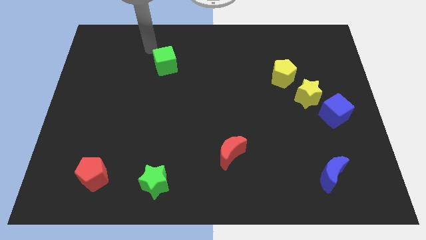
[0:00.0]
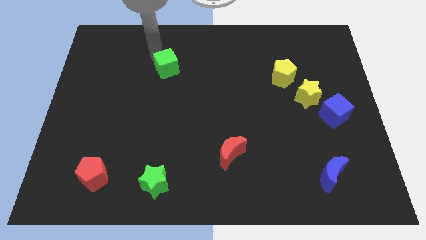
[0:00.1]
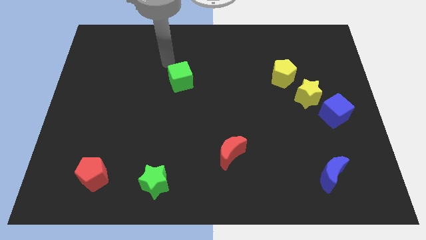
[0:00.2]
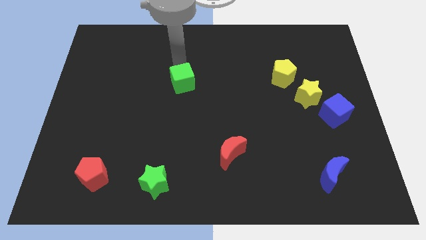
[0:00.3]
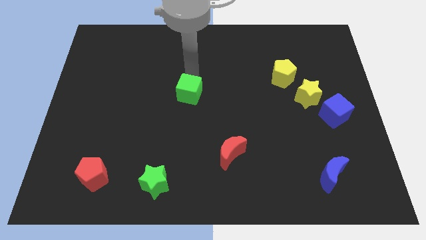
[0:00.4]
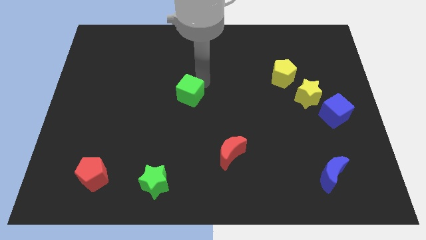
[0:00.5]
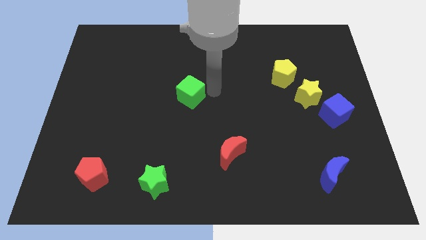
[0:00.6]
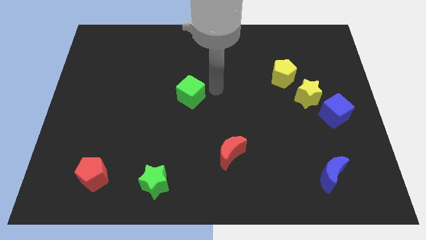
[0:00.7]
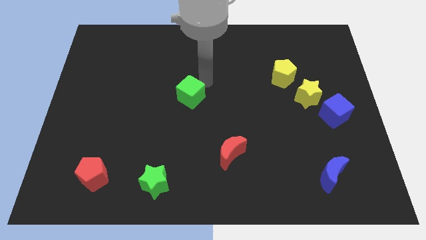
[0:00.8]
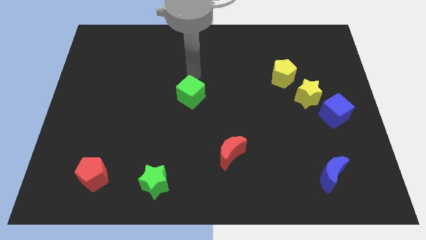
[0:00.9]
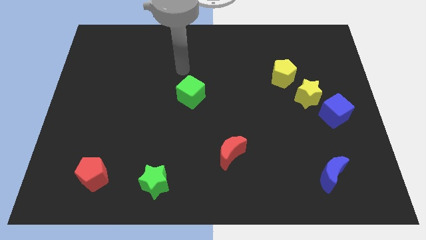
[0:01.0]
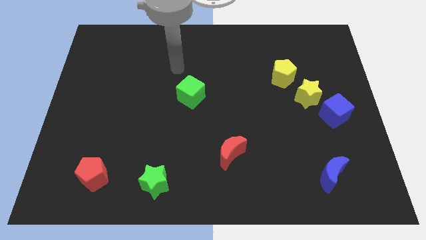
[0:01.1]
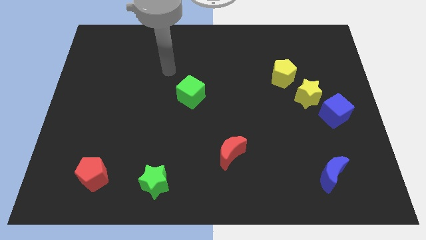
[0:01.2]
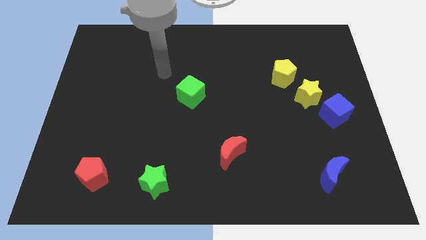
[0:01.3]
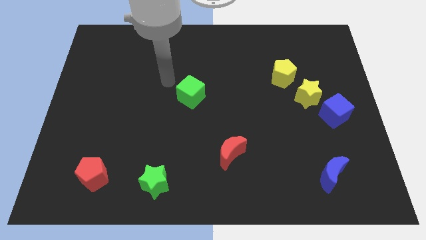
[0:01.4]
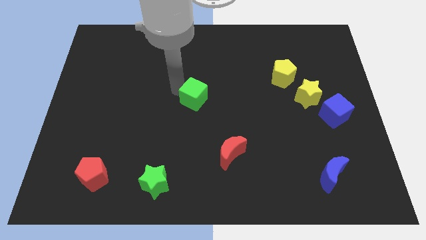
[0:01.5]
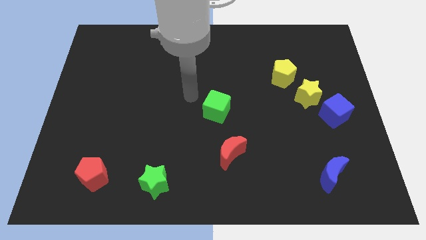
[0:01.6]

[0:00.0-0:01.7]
place the green cube at the centre of the board

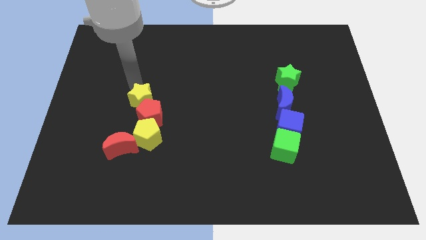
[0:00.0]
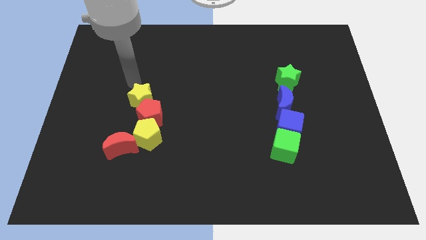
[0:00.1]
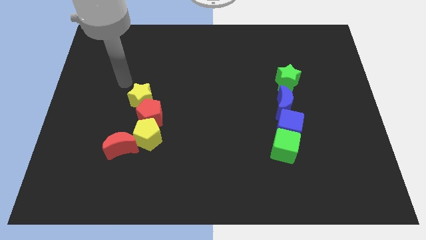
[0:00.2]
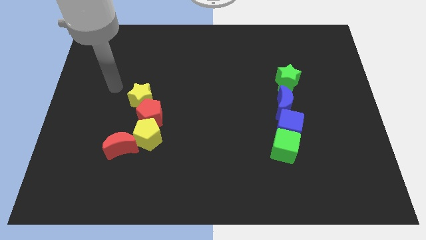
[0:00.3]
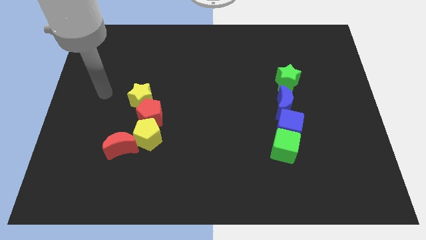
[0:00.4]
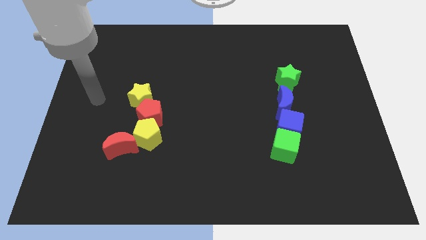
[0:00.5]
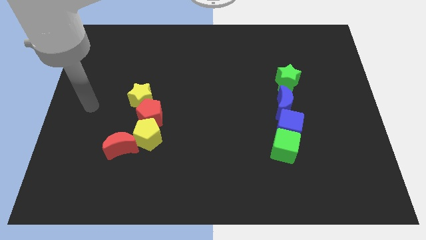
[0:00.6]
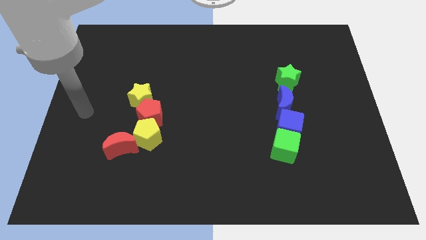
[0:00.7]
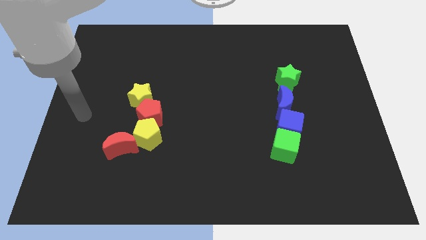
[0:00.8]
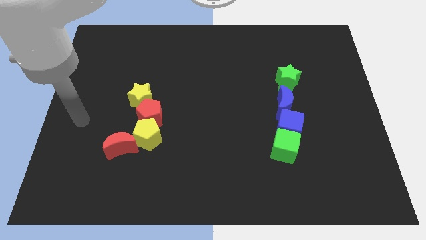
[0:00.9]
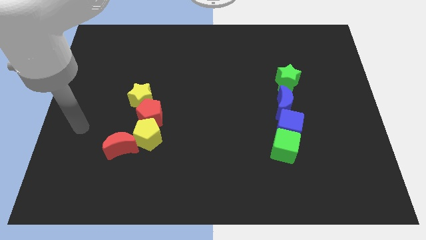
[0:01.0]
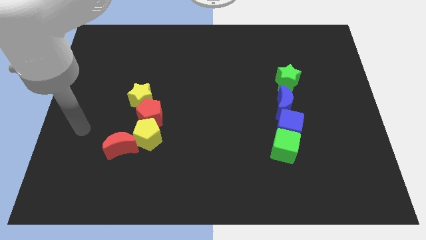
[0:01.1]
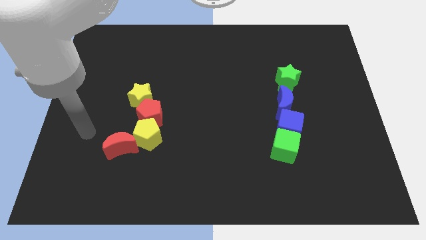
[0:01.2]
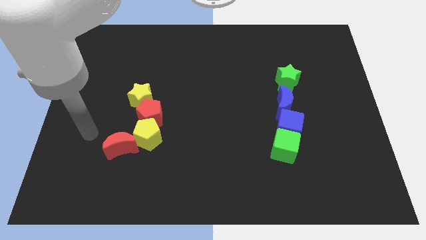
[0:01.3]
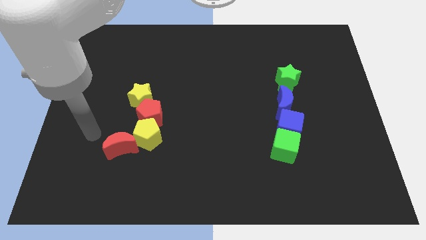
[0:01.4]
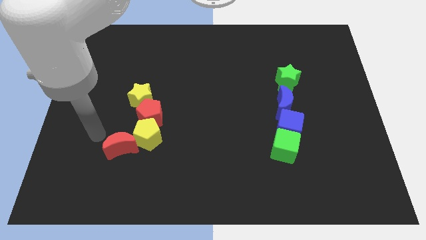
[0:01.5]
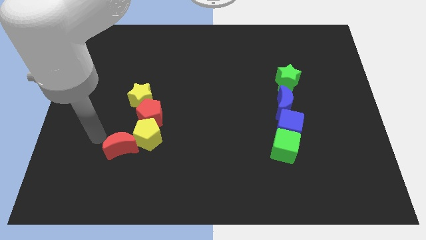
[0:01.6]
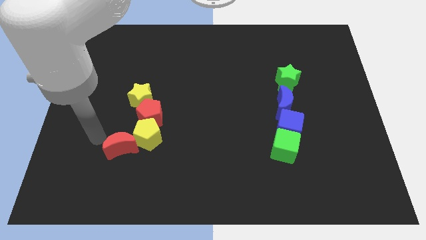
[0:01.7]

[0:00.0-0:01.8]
move the arm away from the yellow star

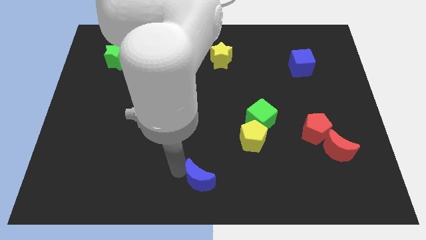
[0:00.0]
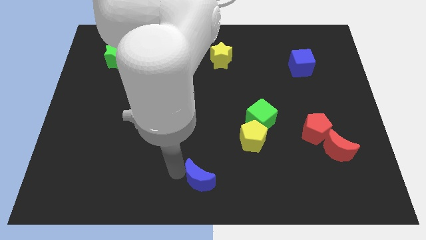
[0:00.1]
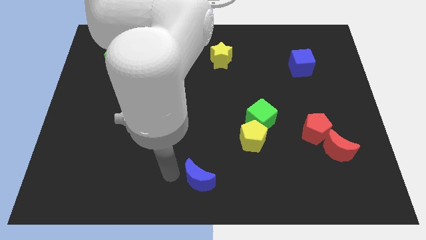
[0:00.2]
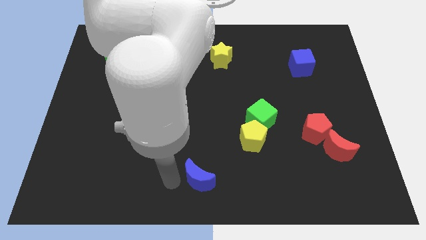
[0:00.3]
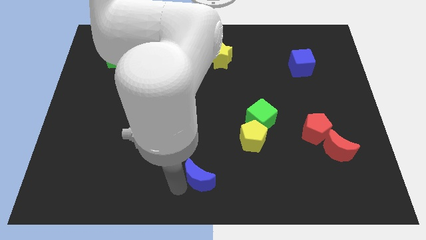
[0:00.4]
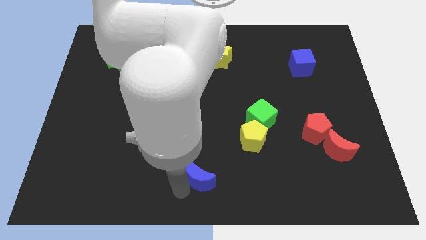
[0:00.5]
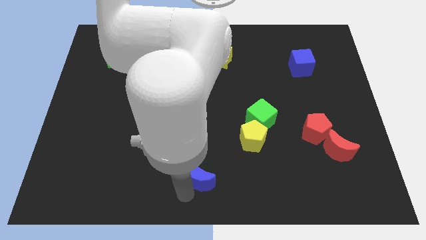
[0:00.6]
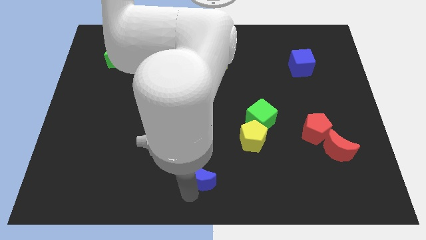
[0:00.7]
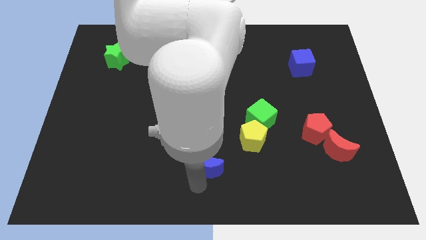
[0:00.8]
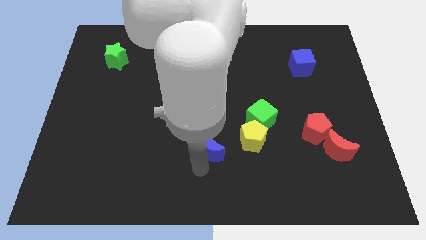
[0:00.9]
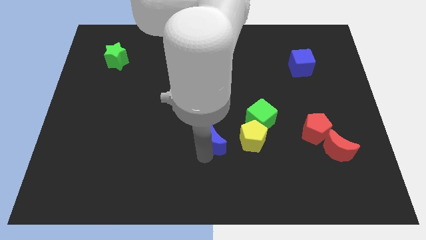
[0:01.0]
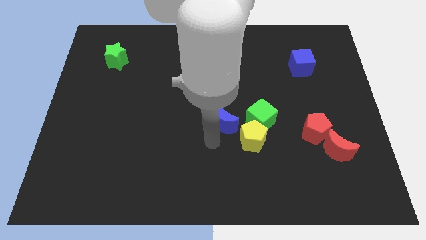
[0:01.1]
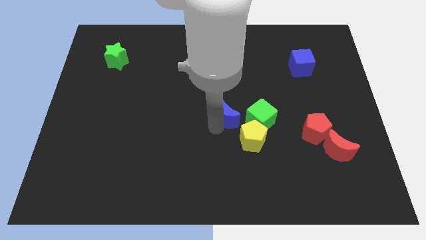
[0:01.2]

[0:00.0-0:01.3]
push the blue crescent to the left of the green star

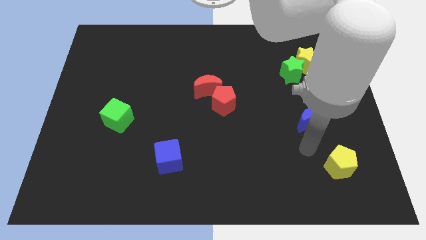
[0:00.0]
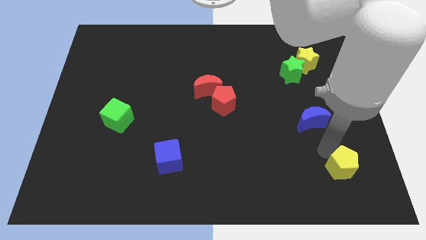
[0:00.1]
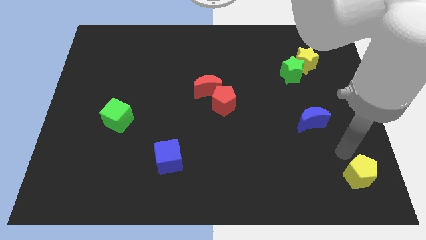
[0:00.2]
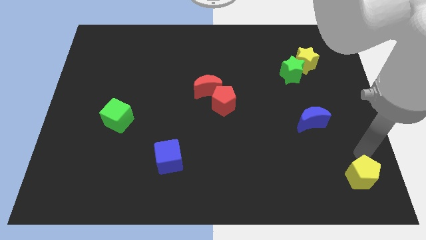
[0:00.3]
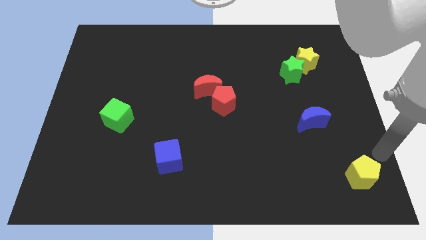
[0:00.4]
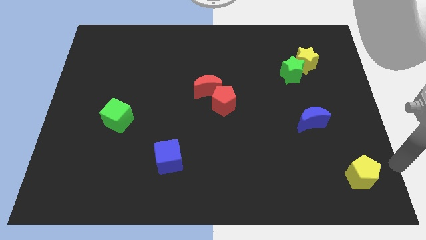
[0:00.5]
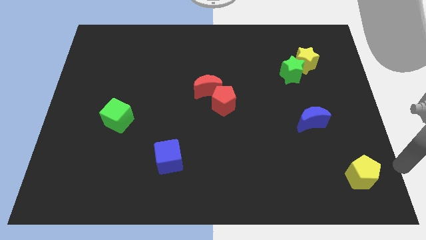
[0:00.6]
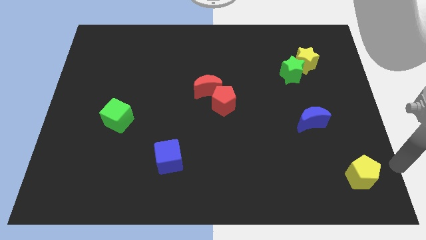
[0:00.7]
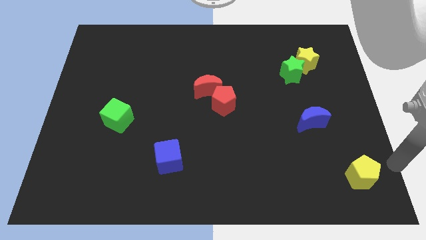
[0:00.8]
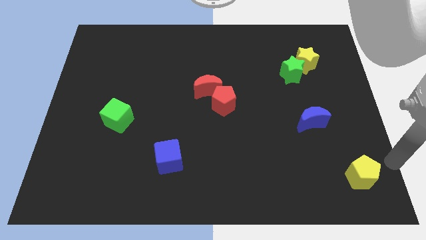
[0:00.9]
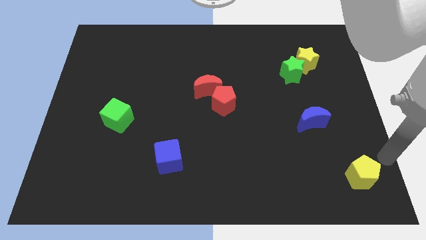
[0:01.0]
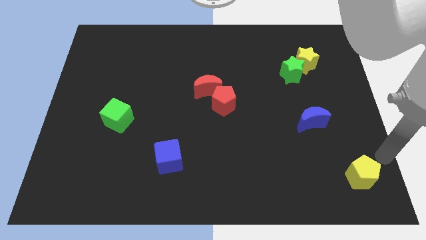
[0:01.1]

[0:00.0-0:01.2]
slightly push the yellow pentagon towards the bottom right

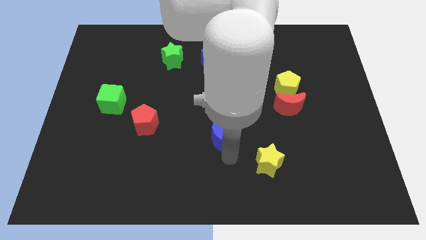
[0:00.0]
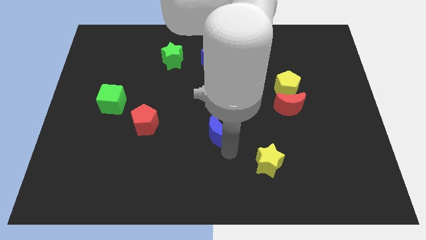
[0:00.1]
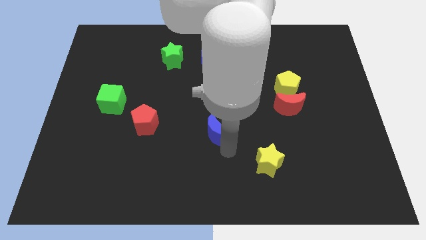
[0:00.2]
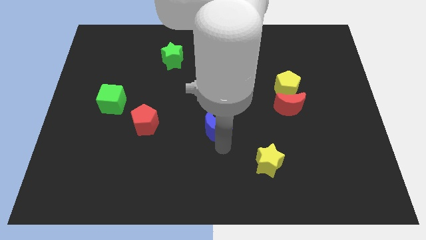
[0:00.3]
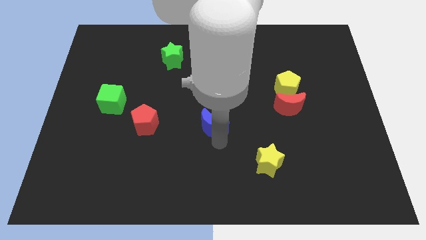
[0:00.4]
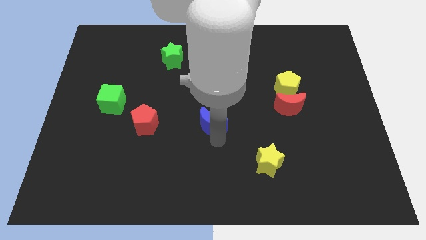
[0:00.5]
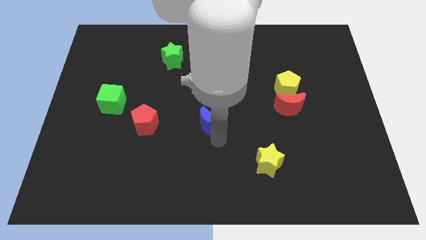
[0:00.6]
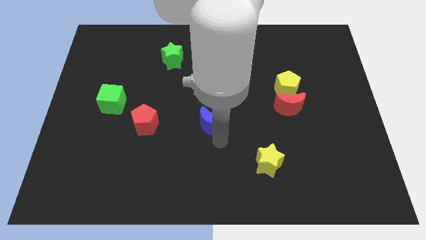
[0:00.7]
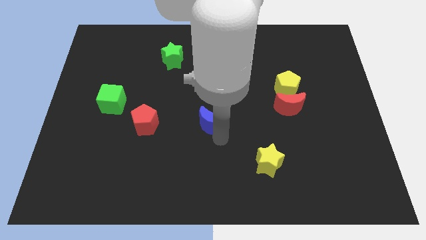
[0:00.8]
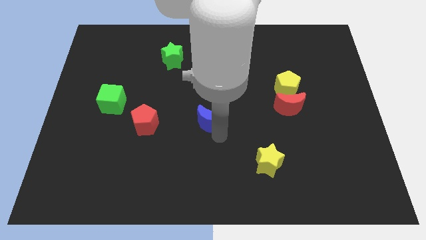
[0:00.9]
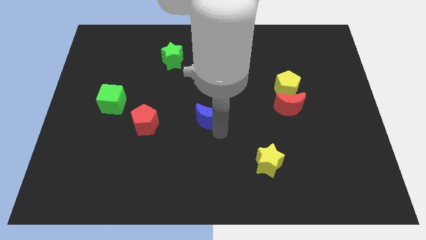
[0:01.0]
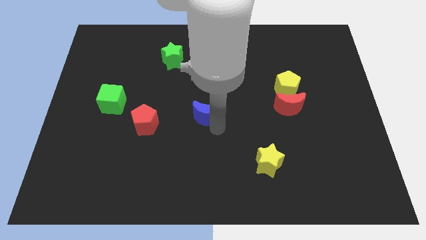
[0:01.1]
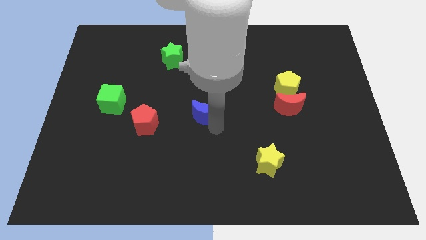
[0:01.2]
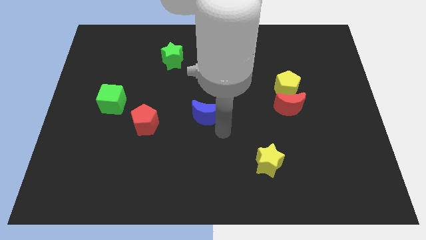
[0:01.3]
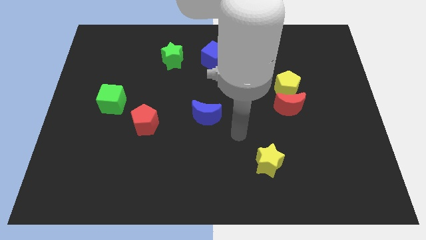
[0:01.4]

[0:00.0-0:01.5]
place the blue moon at the center of the board

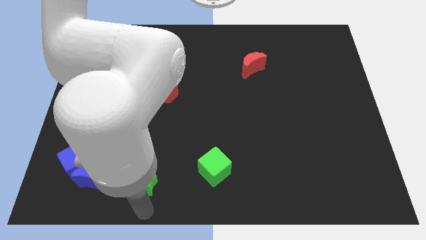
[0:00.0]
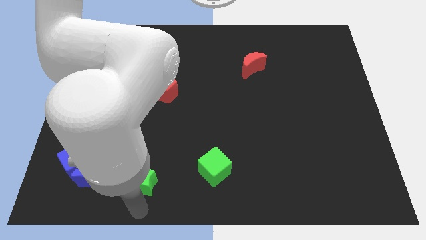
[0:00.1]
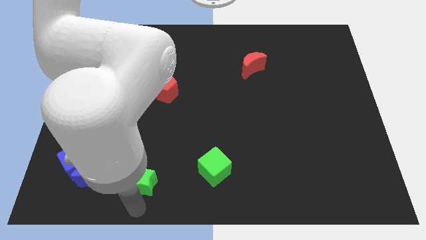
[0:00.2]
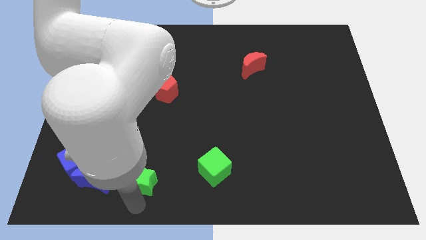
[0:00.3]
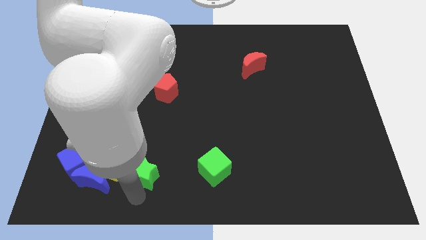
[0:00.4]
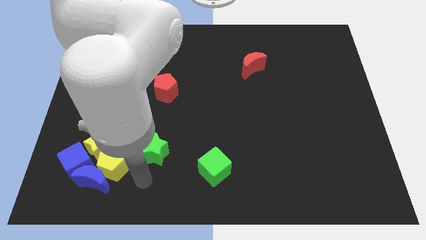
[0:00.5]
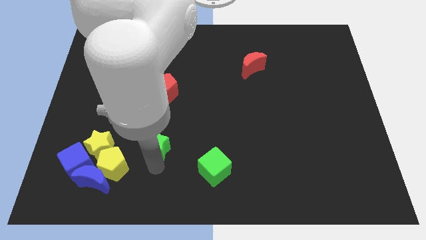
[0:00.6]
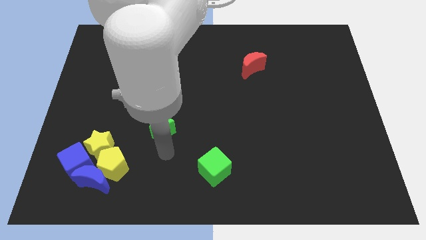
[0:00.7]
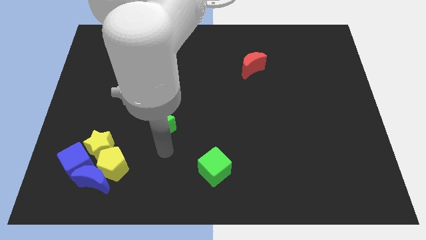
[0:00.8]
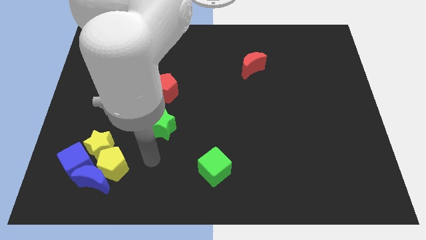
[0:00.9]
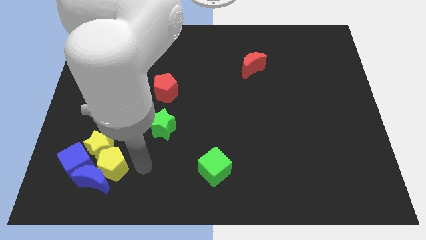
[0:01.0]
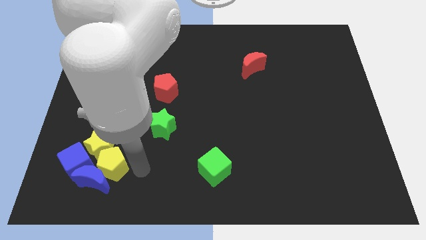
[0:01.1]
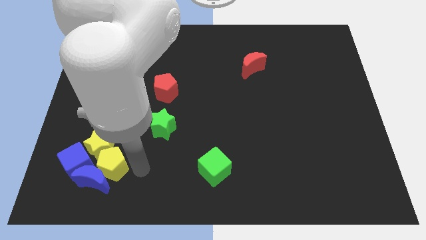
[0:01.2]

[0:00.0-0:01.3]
push the green star below the red pentagon
